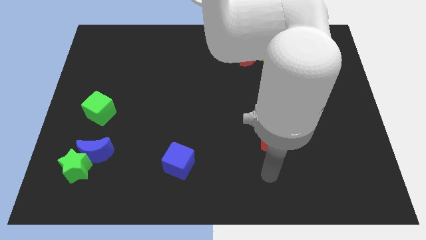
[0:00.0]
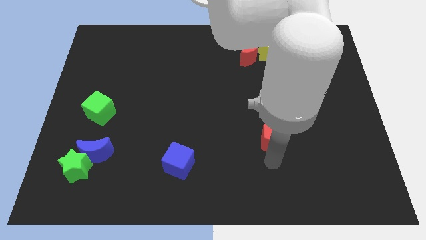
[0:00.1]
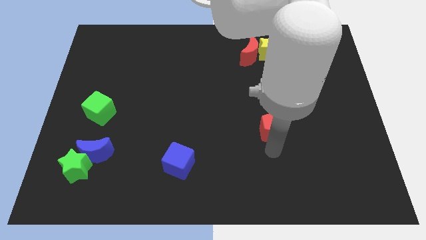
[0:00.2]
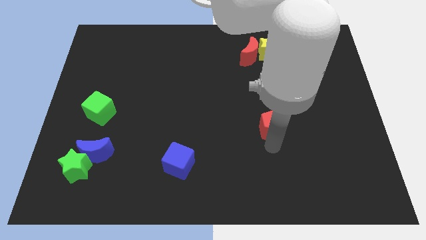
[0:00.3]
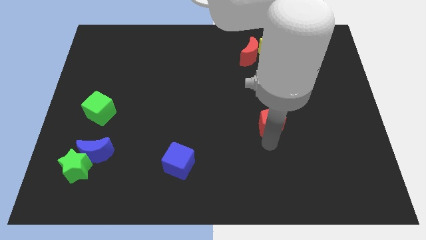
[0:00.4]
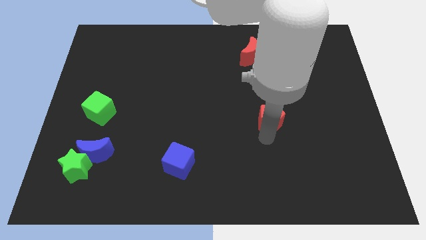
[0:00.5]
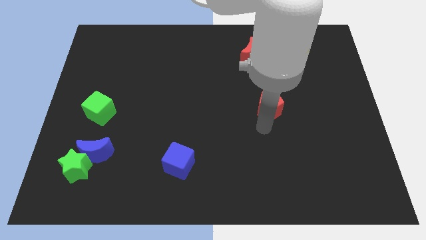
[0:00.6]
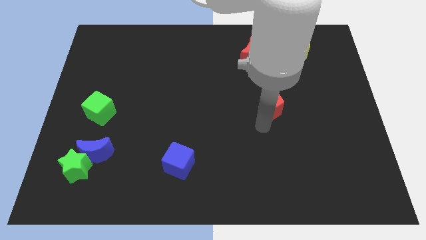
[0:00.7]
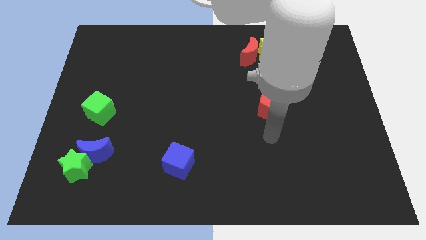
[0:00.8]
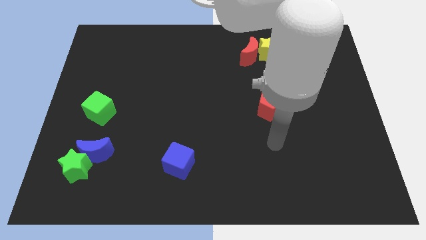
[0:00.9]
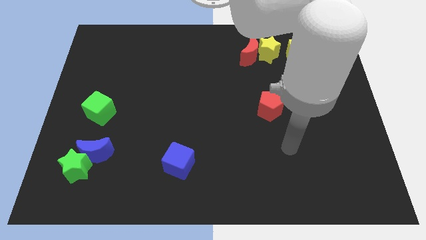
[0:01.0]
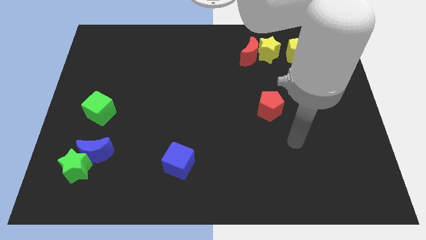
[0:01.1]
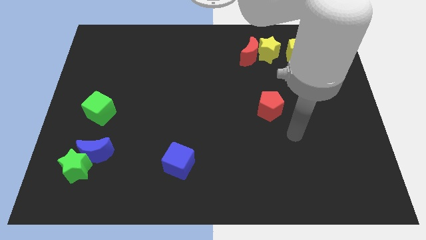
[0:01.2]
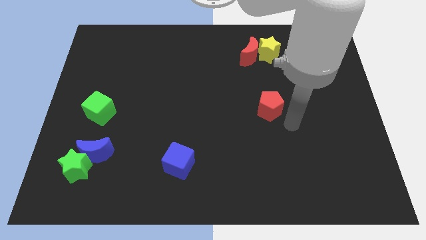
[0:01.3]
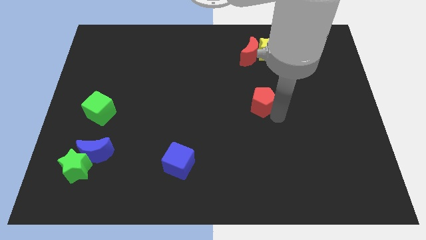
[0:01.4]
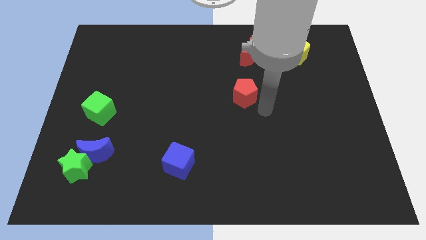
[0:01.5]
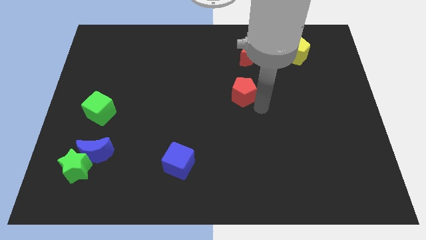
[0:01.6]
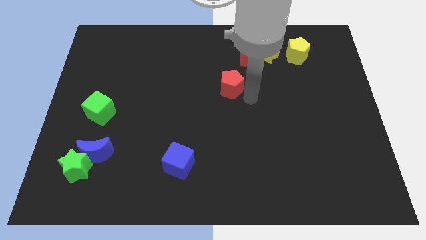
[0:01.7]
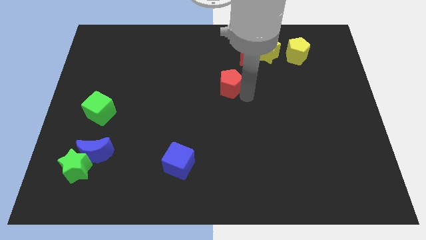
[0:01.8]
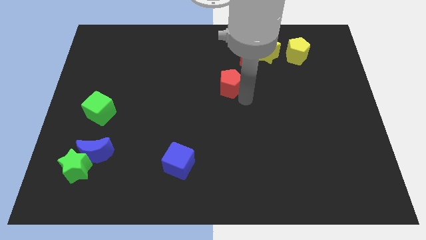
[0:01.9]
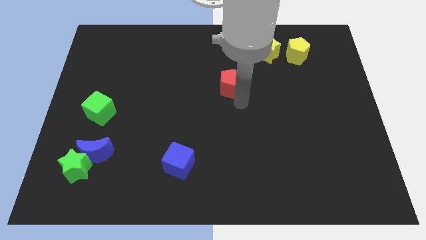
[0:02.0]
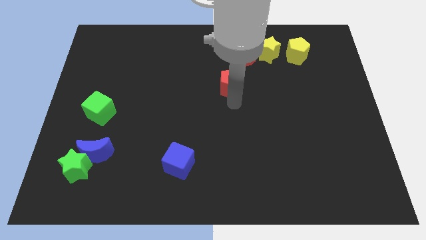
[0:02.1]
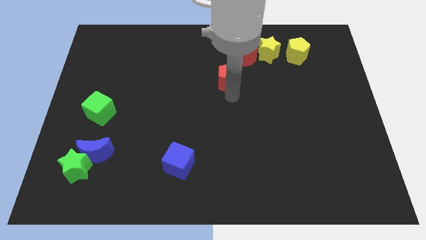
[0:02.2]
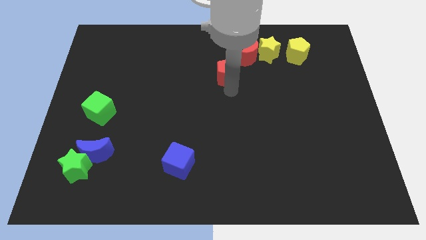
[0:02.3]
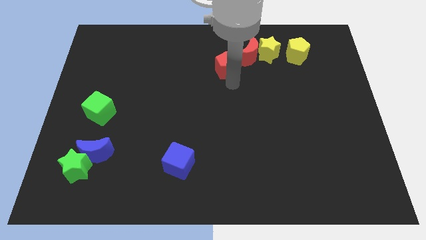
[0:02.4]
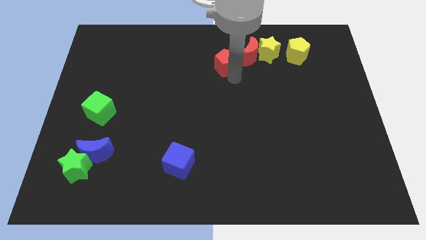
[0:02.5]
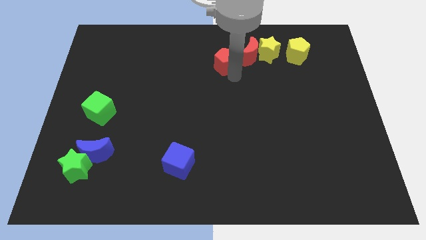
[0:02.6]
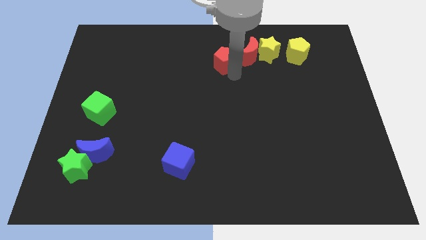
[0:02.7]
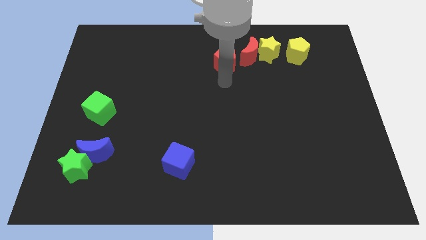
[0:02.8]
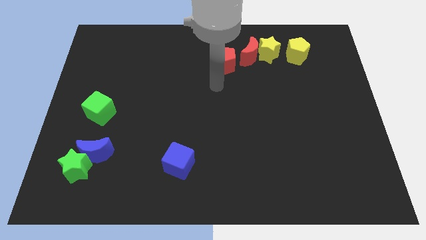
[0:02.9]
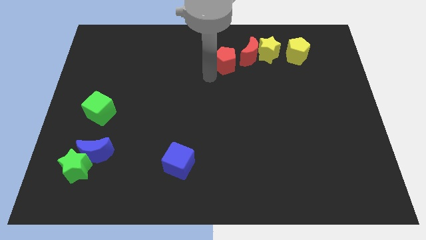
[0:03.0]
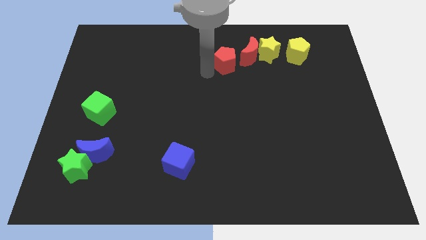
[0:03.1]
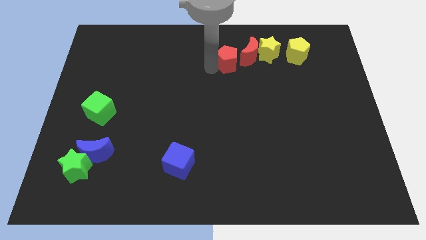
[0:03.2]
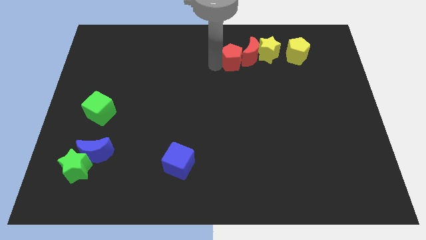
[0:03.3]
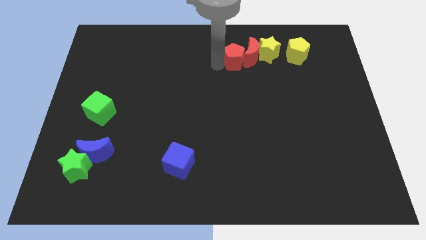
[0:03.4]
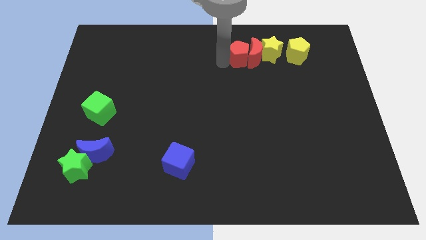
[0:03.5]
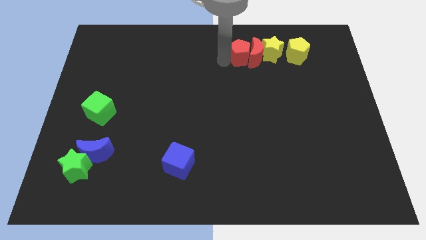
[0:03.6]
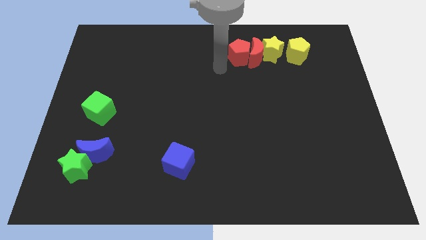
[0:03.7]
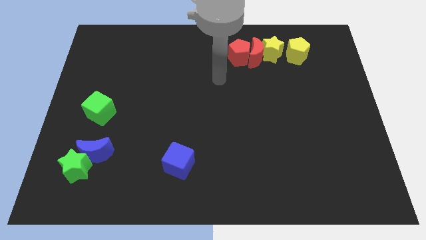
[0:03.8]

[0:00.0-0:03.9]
place the red pentagon towards the left side of the red crescent

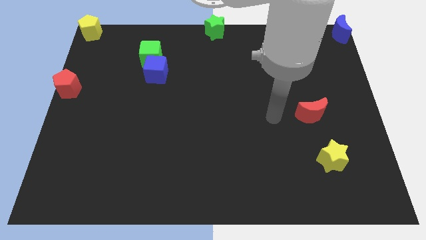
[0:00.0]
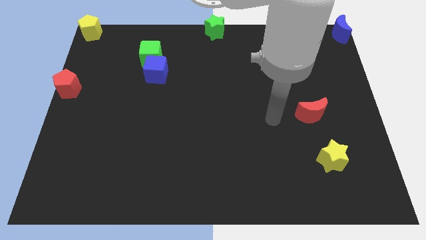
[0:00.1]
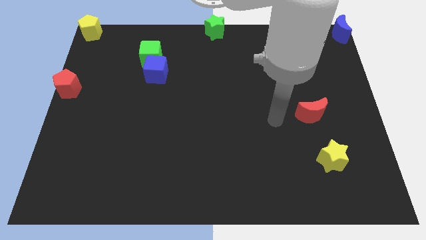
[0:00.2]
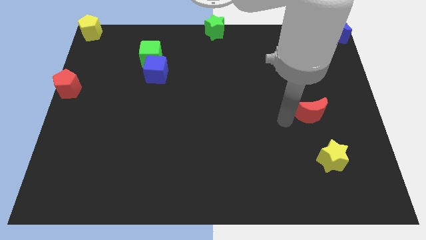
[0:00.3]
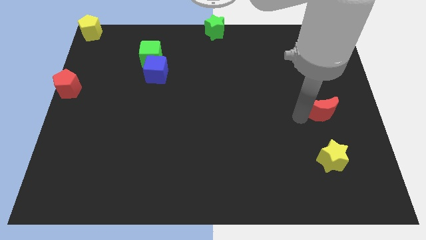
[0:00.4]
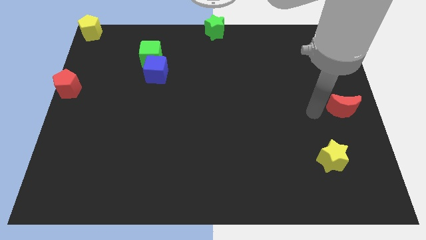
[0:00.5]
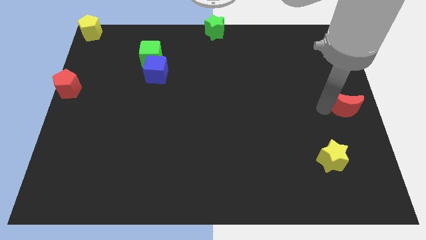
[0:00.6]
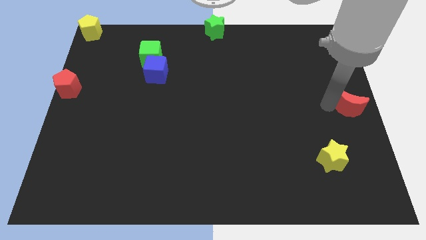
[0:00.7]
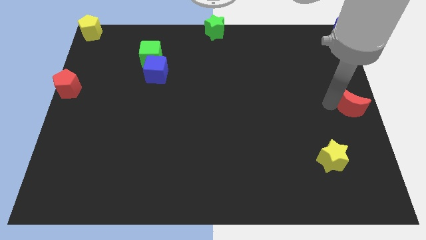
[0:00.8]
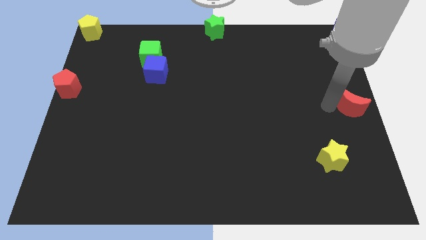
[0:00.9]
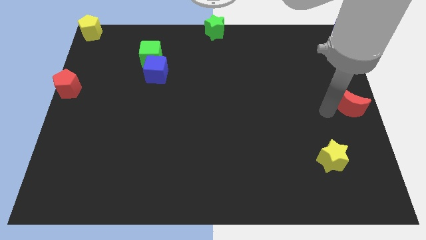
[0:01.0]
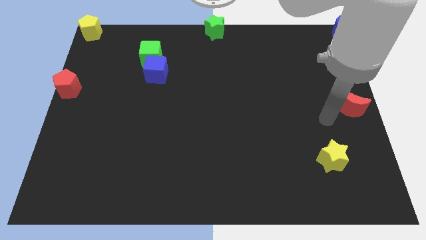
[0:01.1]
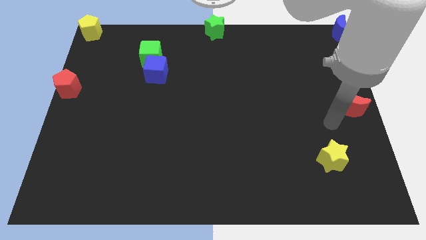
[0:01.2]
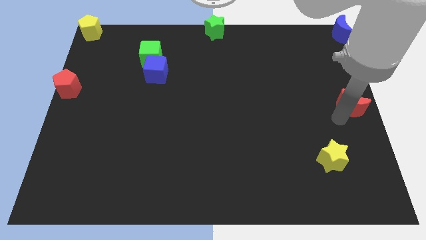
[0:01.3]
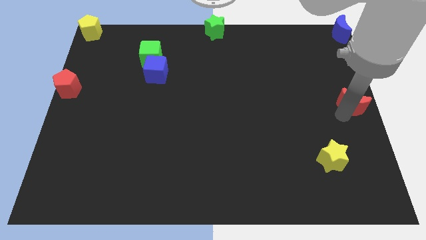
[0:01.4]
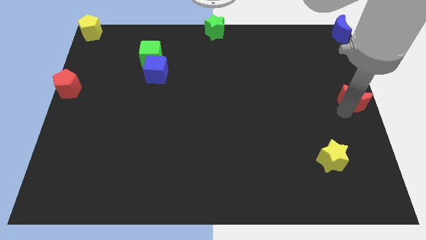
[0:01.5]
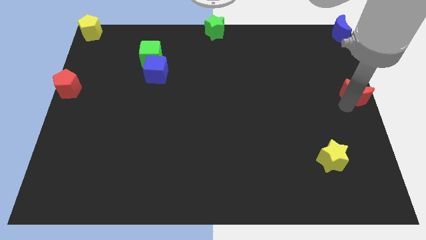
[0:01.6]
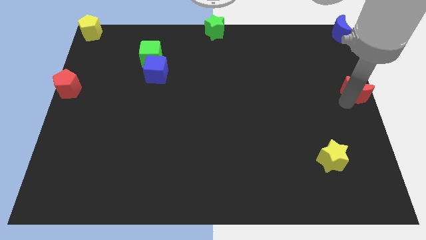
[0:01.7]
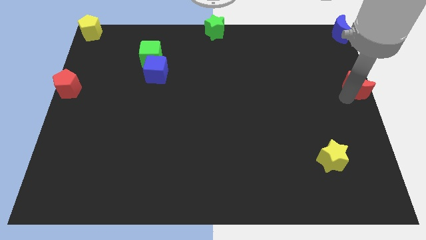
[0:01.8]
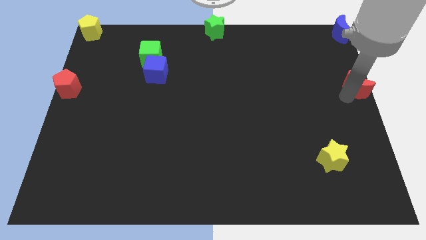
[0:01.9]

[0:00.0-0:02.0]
put the red moon vertically below the blue moon

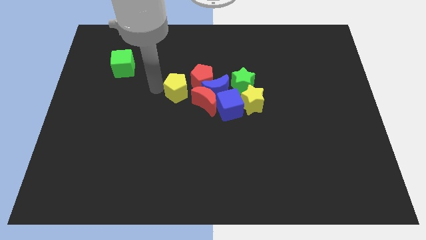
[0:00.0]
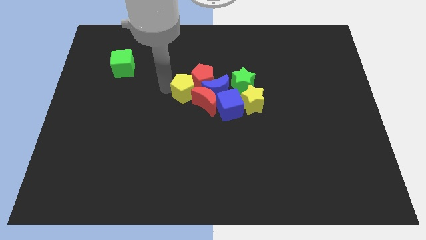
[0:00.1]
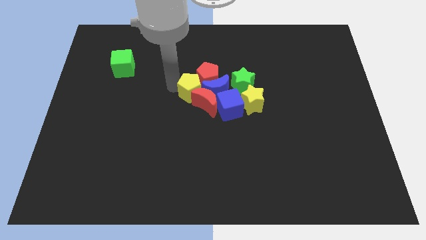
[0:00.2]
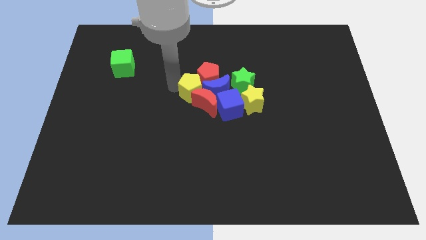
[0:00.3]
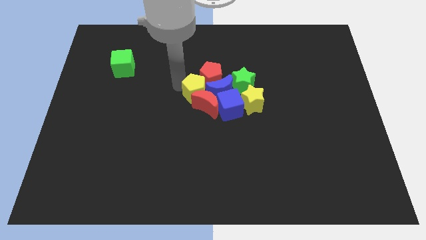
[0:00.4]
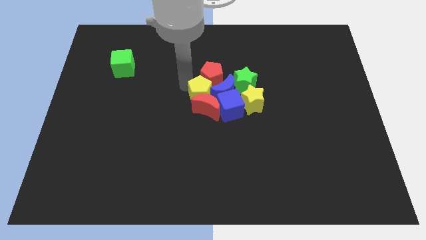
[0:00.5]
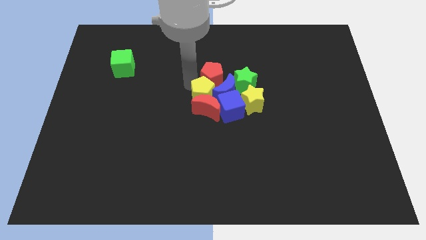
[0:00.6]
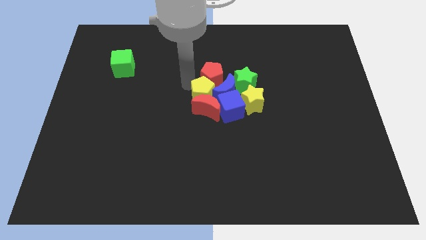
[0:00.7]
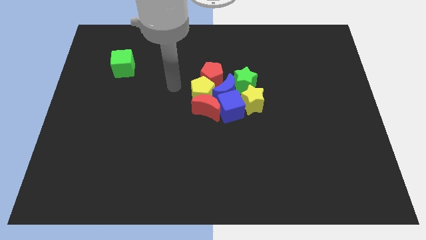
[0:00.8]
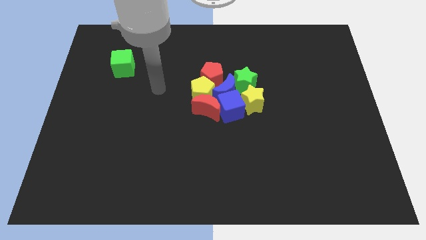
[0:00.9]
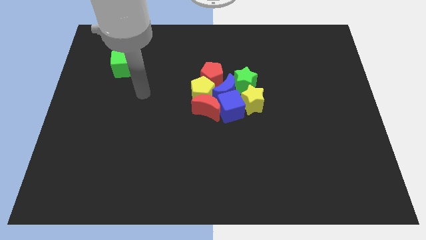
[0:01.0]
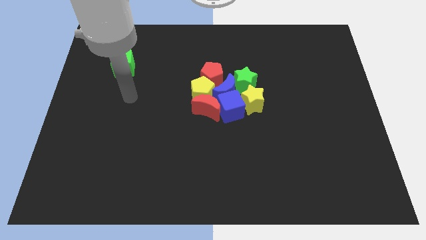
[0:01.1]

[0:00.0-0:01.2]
push the yellow pentagon to the center of the board

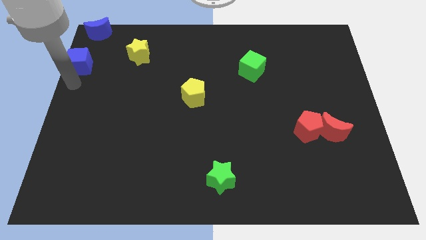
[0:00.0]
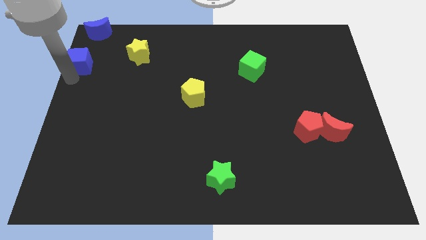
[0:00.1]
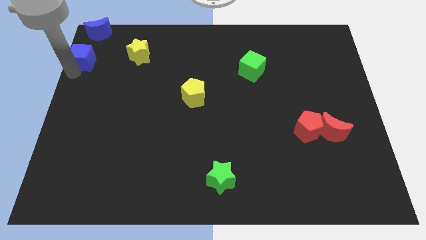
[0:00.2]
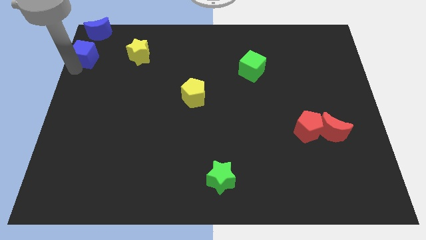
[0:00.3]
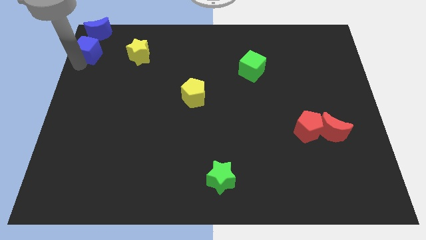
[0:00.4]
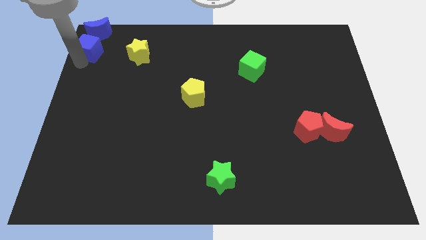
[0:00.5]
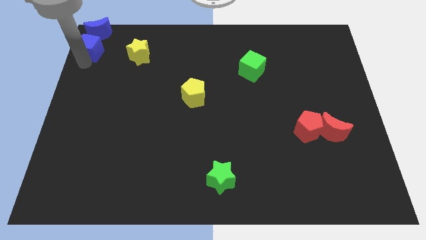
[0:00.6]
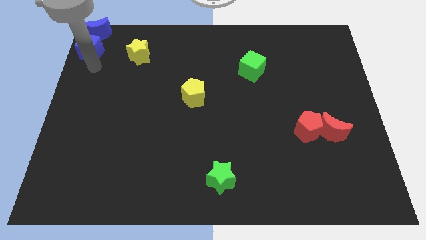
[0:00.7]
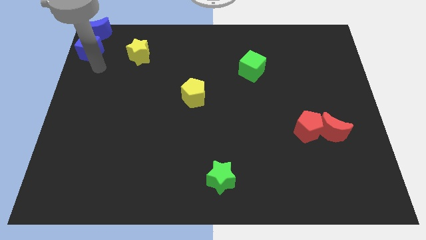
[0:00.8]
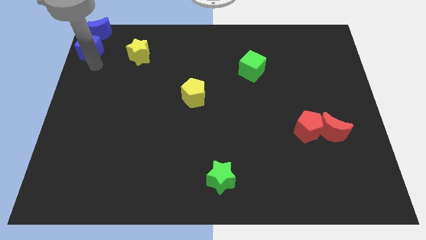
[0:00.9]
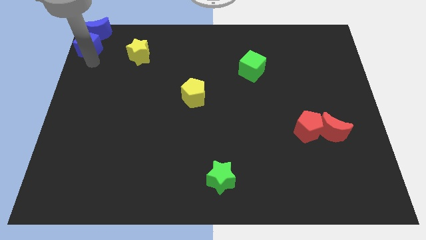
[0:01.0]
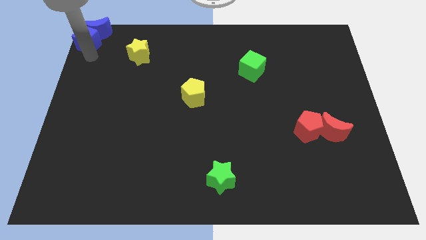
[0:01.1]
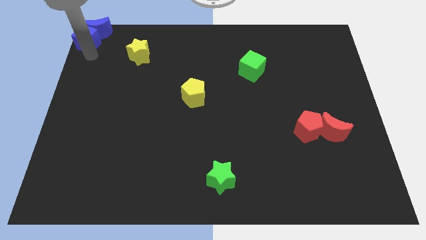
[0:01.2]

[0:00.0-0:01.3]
move the blue cube into the blue moon to the top left corner of the board

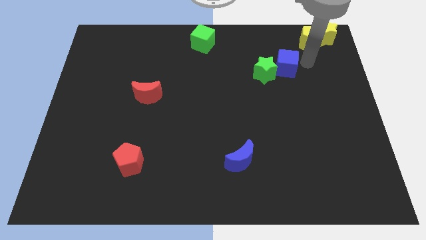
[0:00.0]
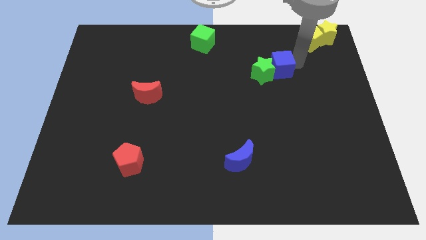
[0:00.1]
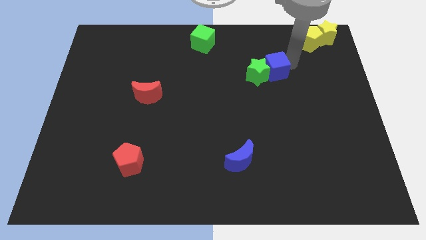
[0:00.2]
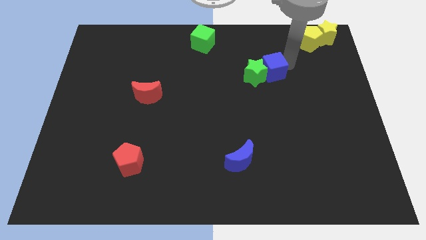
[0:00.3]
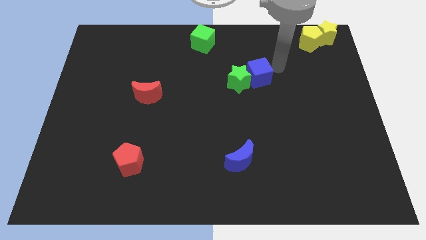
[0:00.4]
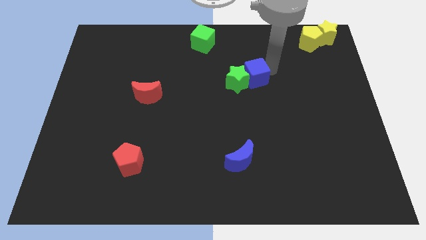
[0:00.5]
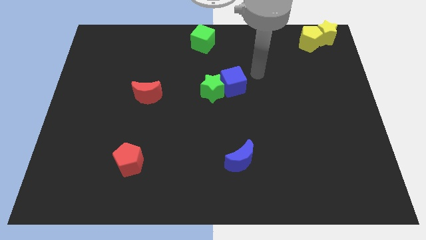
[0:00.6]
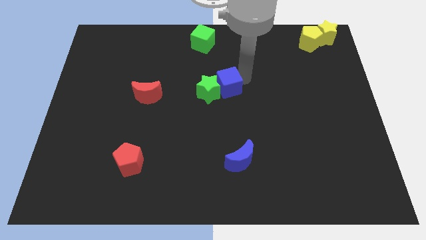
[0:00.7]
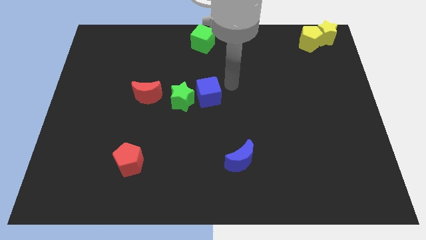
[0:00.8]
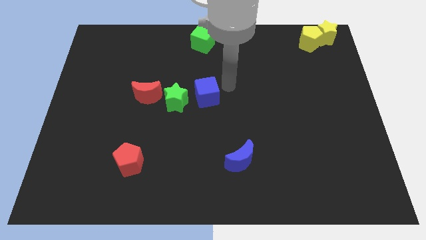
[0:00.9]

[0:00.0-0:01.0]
push blue cube into green star
